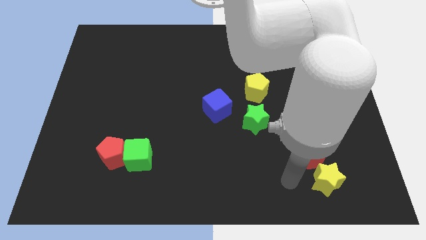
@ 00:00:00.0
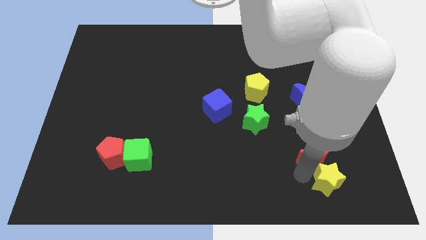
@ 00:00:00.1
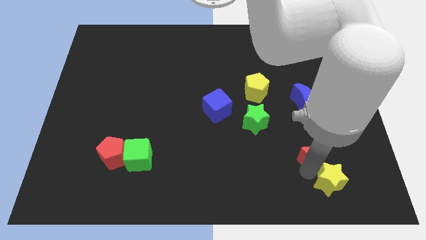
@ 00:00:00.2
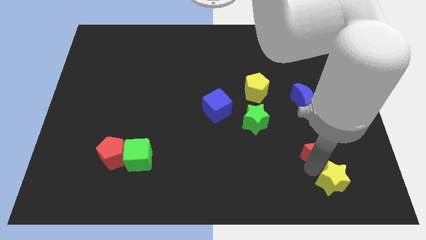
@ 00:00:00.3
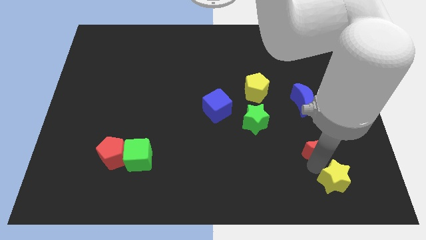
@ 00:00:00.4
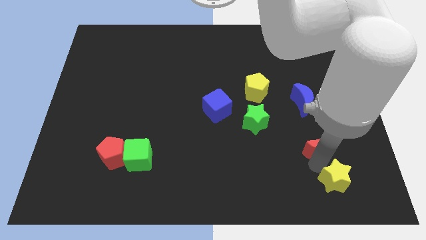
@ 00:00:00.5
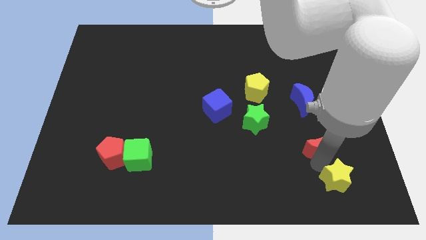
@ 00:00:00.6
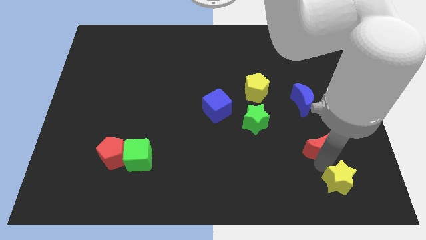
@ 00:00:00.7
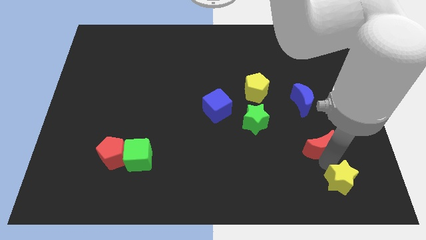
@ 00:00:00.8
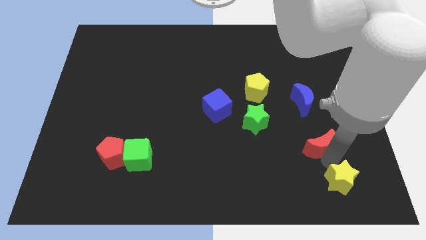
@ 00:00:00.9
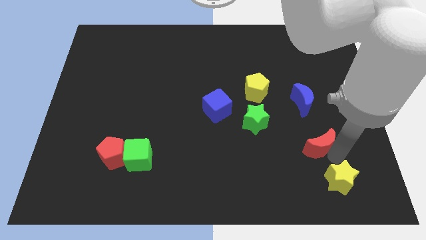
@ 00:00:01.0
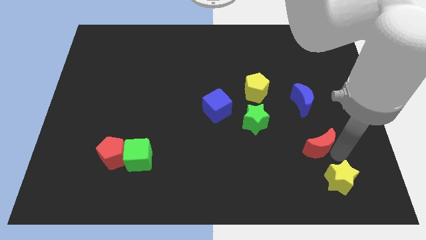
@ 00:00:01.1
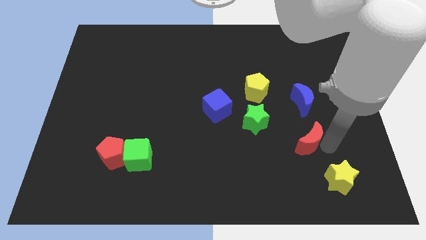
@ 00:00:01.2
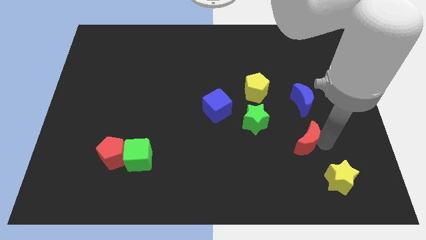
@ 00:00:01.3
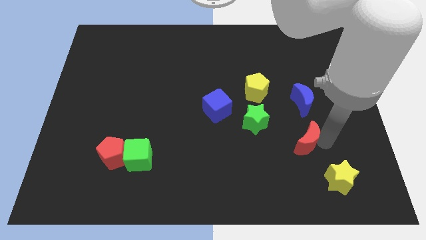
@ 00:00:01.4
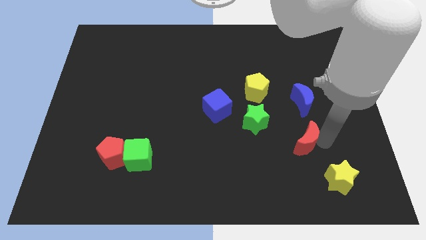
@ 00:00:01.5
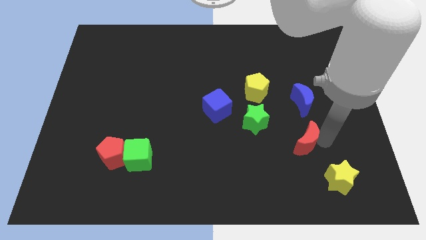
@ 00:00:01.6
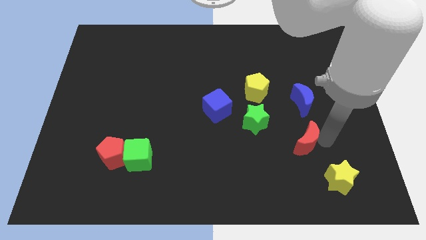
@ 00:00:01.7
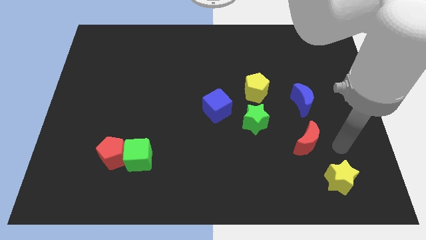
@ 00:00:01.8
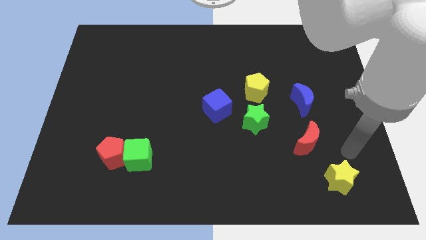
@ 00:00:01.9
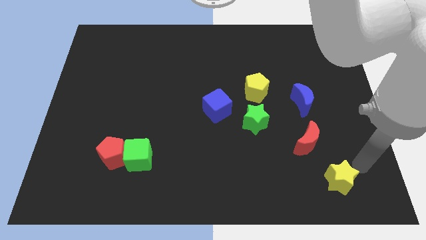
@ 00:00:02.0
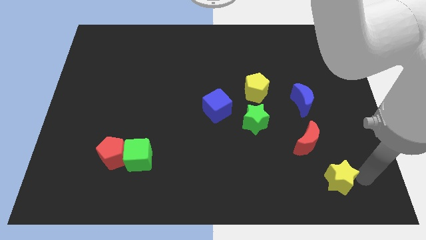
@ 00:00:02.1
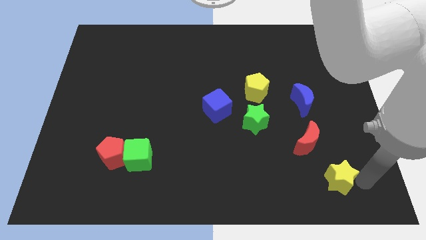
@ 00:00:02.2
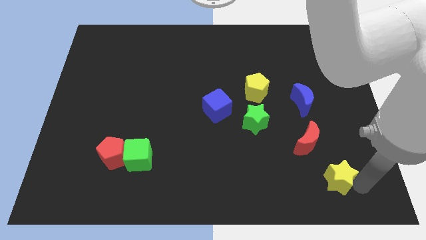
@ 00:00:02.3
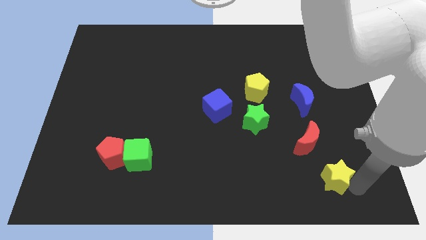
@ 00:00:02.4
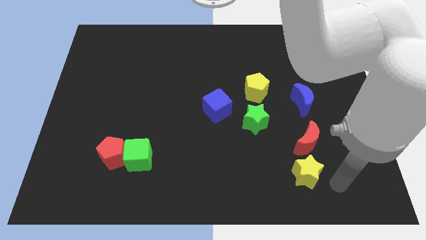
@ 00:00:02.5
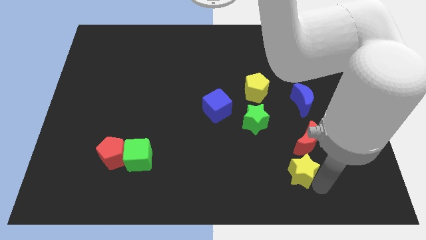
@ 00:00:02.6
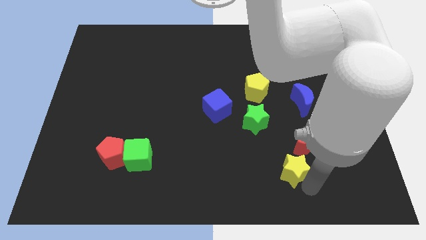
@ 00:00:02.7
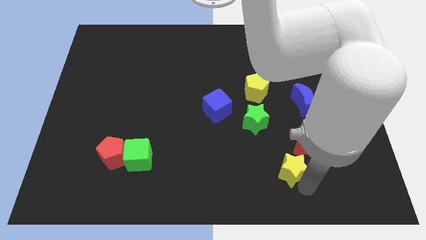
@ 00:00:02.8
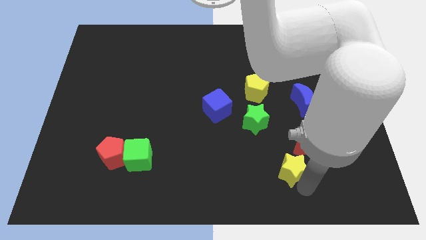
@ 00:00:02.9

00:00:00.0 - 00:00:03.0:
put the yellow star on the bottom of red crescent

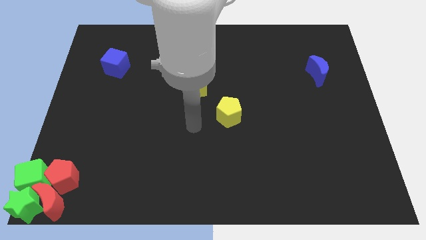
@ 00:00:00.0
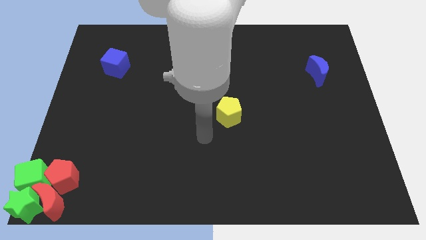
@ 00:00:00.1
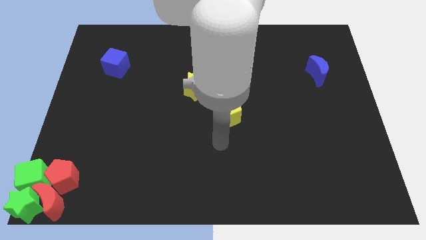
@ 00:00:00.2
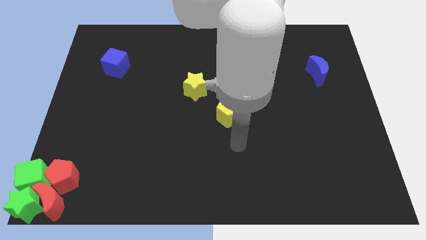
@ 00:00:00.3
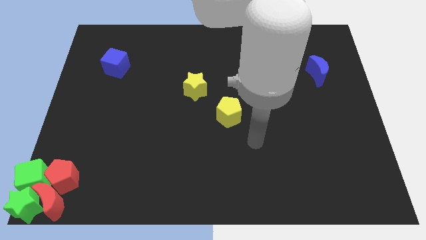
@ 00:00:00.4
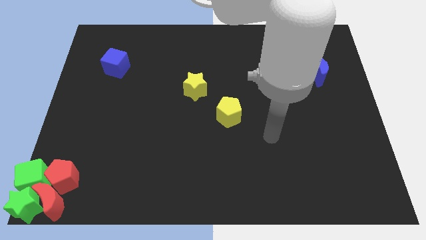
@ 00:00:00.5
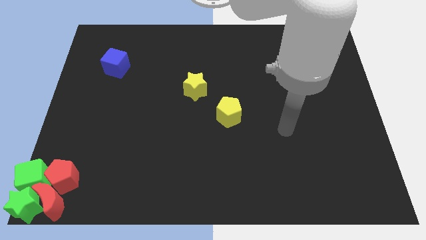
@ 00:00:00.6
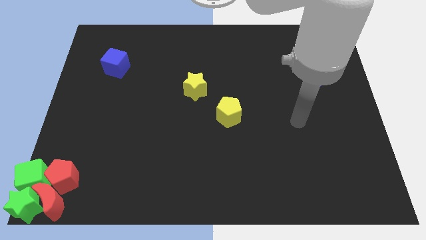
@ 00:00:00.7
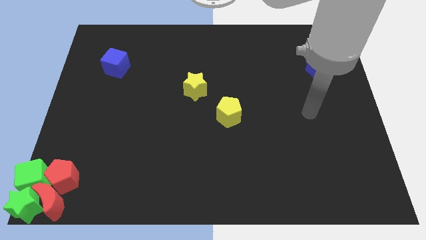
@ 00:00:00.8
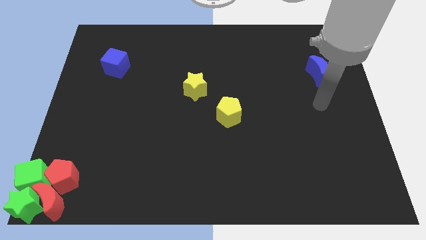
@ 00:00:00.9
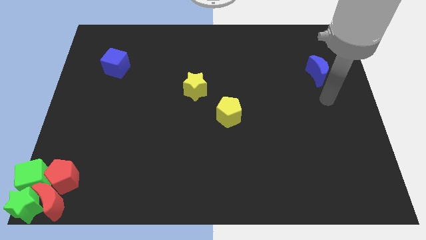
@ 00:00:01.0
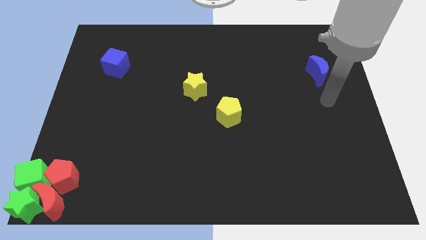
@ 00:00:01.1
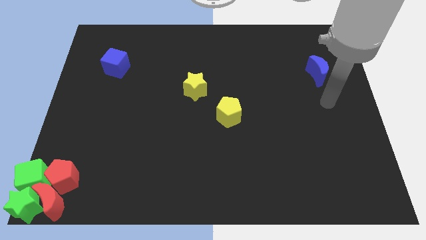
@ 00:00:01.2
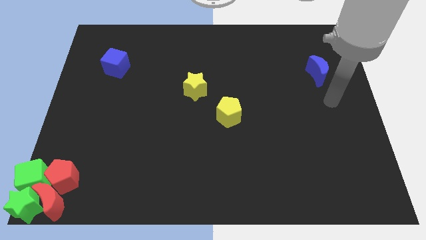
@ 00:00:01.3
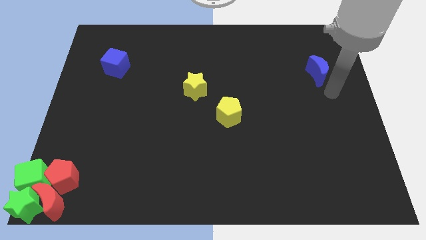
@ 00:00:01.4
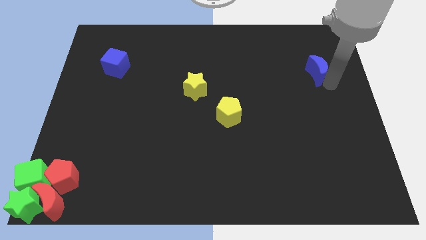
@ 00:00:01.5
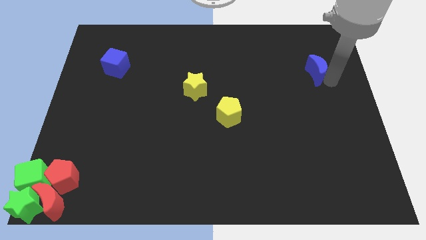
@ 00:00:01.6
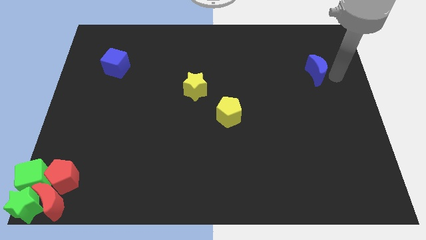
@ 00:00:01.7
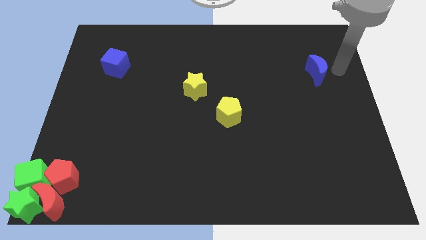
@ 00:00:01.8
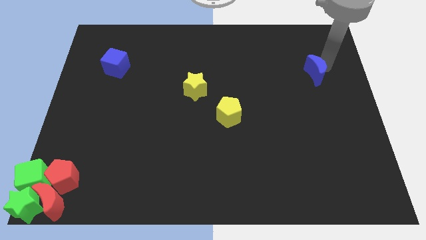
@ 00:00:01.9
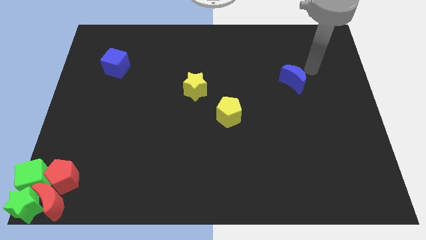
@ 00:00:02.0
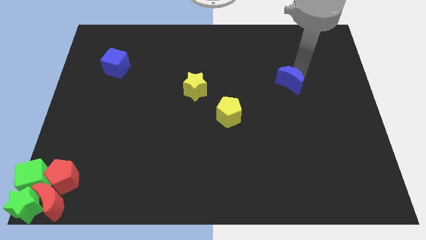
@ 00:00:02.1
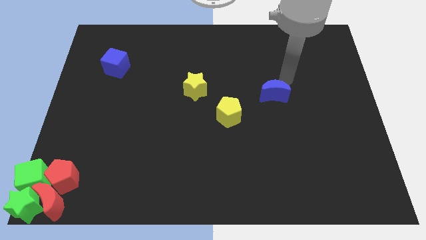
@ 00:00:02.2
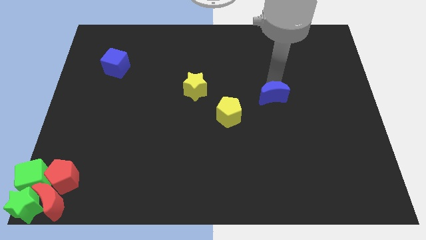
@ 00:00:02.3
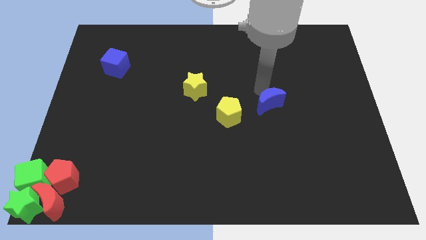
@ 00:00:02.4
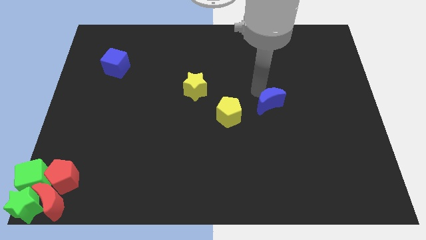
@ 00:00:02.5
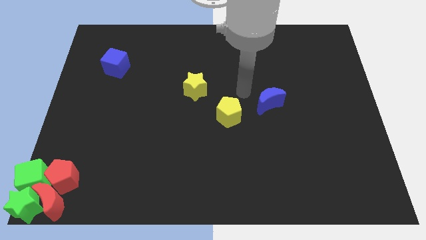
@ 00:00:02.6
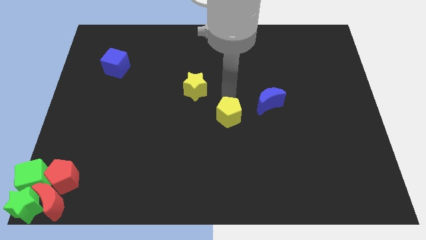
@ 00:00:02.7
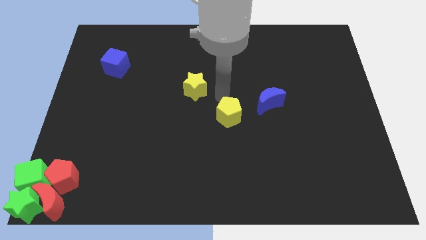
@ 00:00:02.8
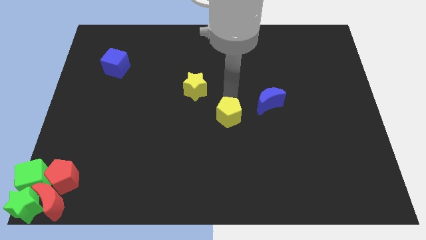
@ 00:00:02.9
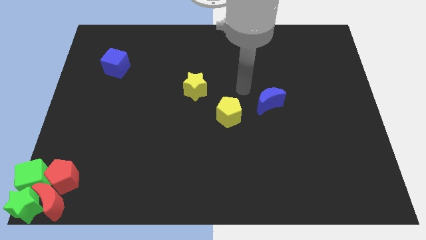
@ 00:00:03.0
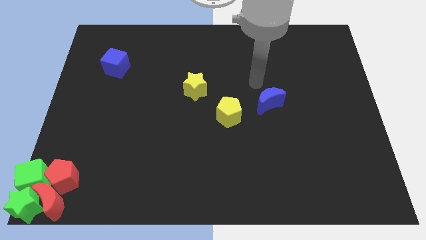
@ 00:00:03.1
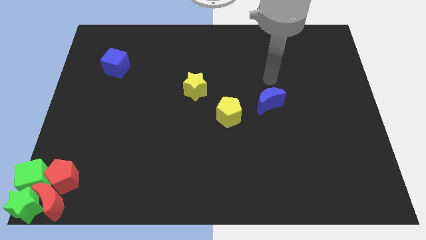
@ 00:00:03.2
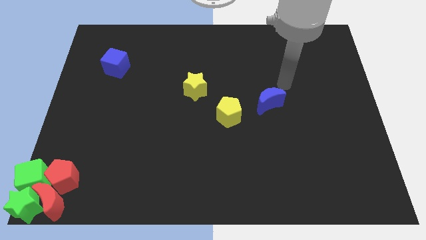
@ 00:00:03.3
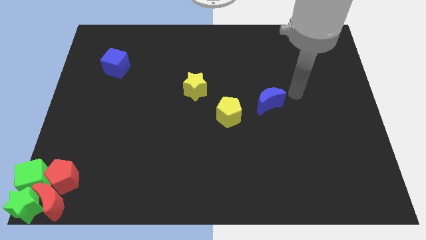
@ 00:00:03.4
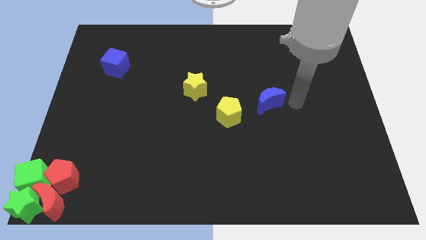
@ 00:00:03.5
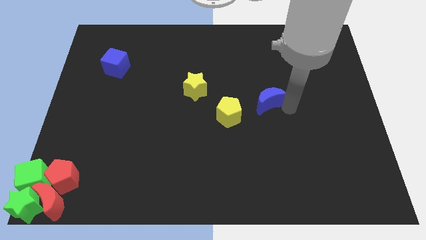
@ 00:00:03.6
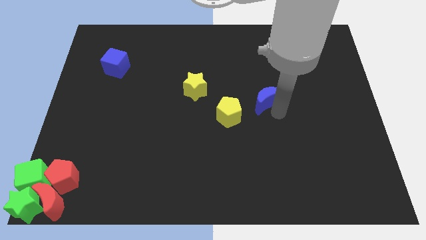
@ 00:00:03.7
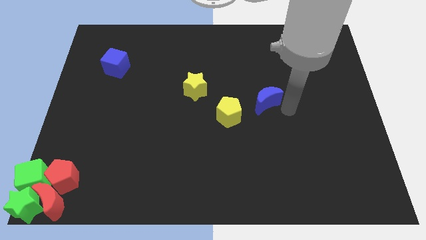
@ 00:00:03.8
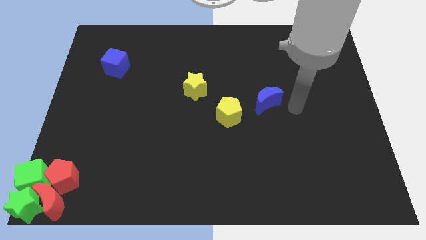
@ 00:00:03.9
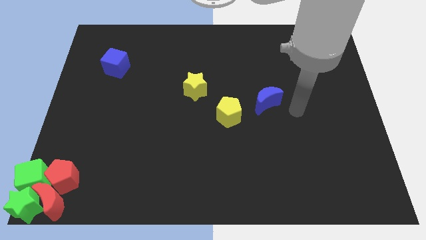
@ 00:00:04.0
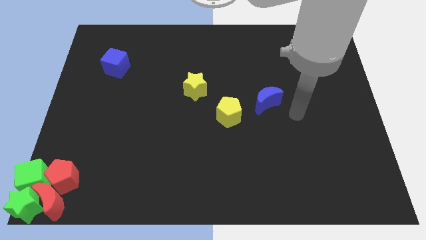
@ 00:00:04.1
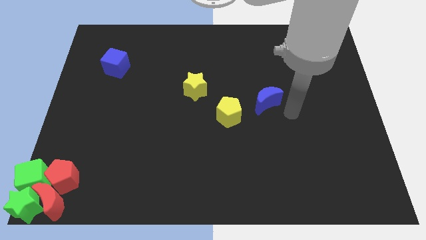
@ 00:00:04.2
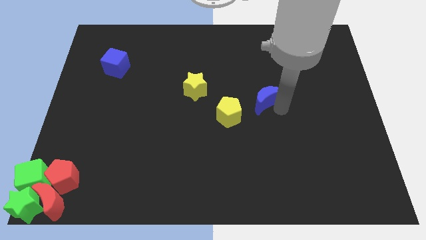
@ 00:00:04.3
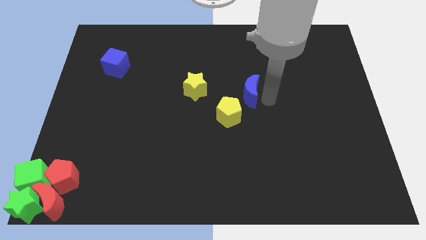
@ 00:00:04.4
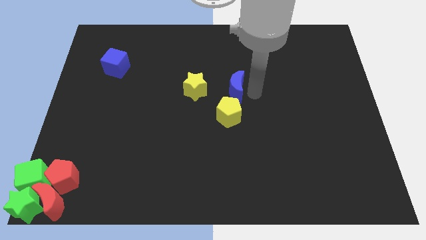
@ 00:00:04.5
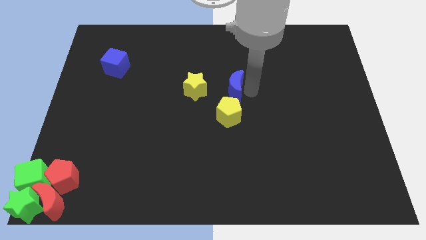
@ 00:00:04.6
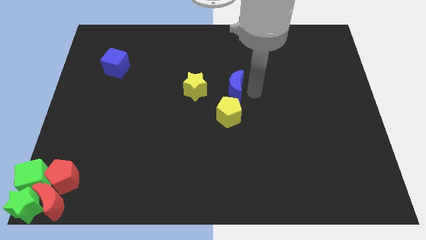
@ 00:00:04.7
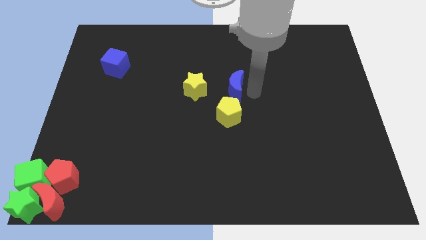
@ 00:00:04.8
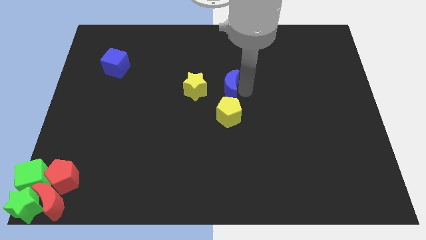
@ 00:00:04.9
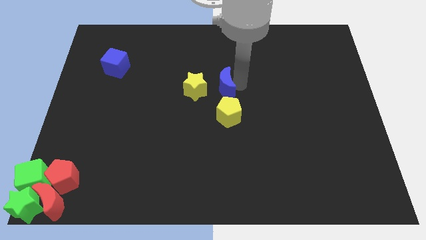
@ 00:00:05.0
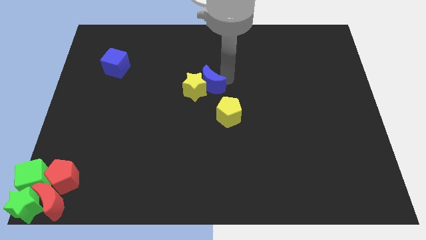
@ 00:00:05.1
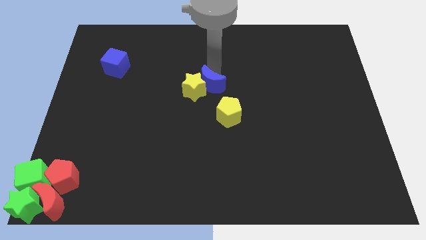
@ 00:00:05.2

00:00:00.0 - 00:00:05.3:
push the blue crescent into the yellow star

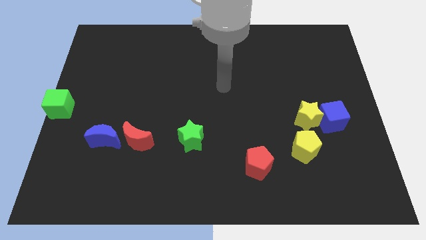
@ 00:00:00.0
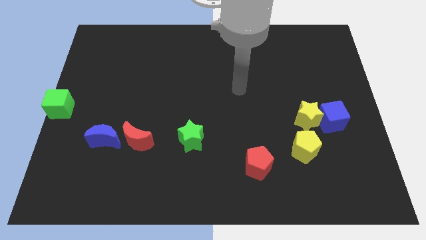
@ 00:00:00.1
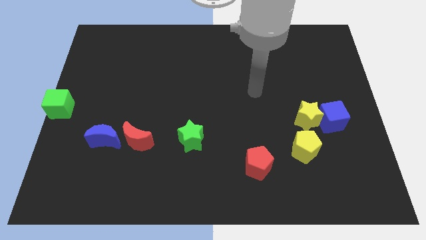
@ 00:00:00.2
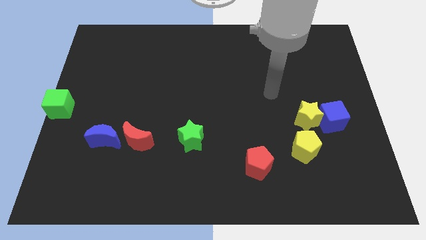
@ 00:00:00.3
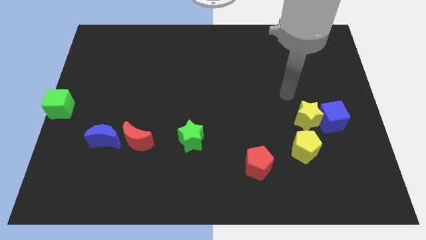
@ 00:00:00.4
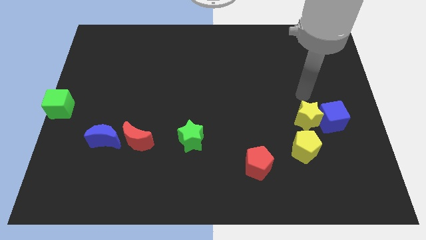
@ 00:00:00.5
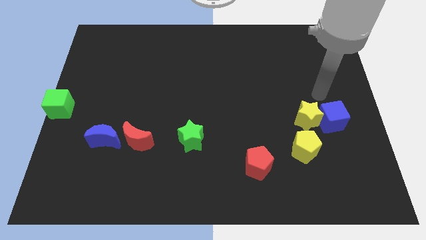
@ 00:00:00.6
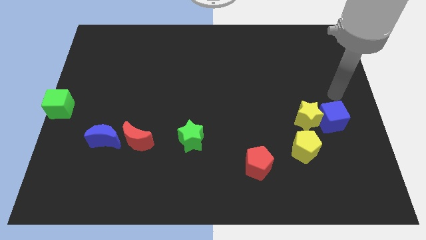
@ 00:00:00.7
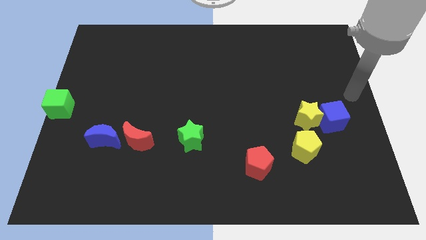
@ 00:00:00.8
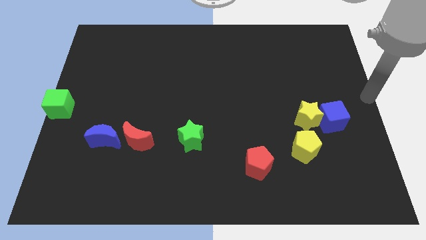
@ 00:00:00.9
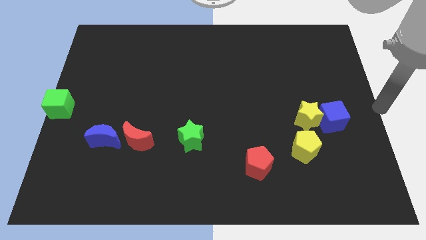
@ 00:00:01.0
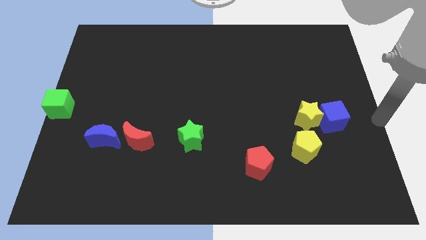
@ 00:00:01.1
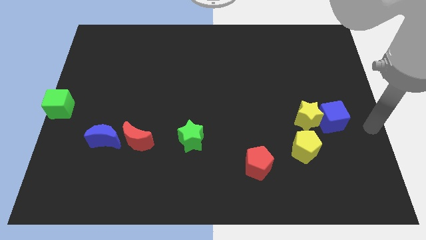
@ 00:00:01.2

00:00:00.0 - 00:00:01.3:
place your arm at the center right of the board
